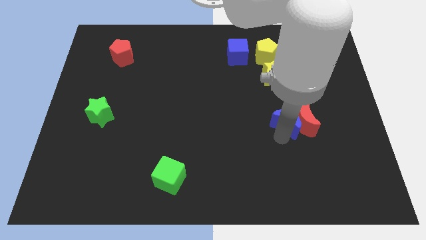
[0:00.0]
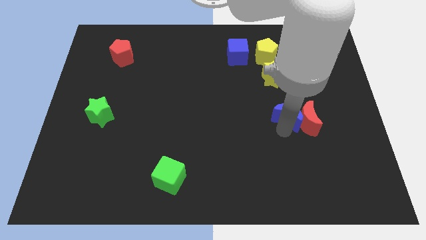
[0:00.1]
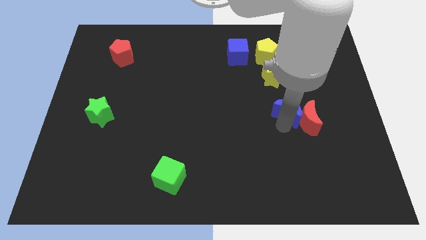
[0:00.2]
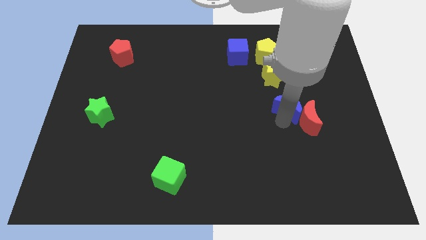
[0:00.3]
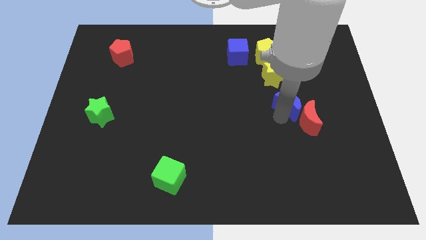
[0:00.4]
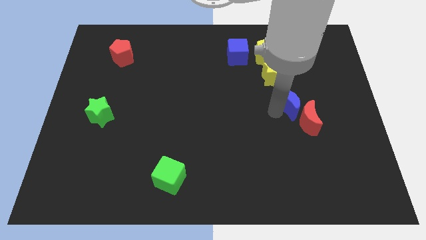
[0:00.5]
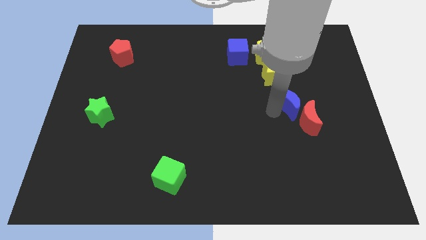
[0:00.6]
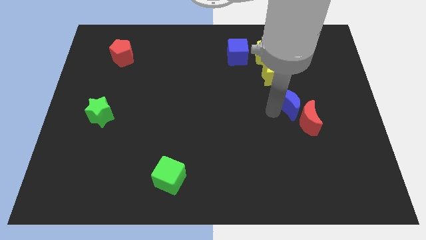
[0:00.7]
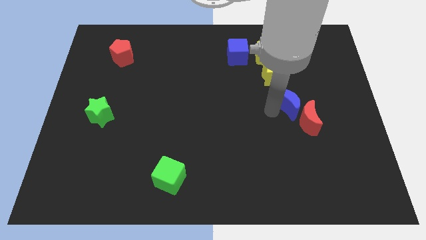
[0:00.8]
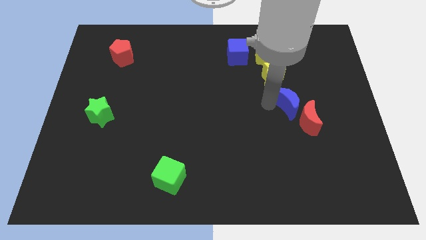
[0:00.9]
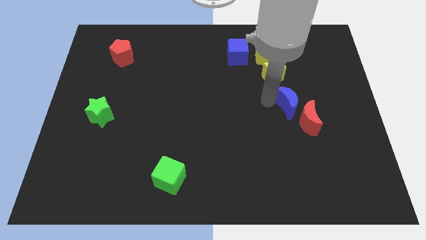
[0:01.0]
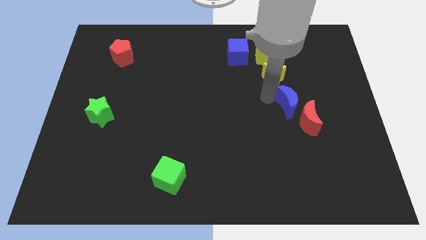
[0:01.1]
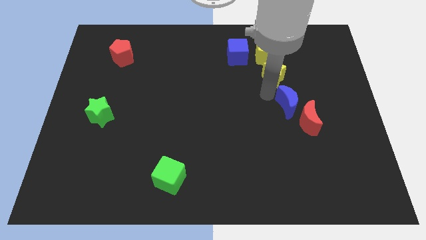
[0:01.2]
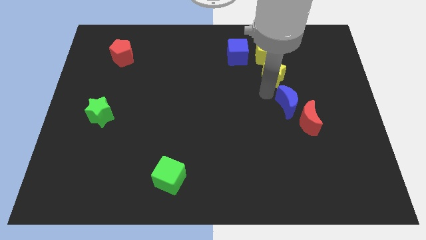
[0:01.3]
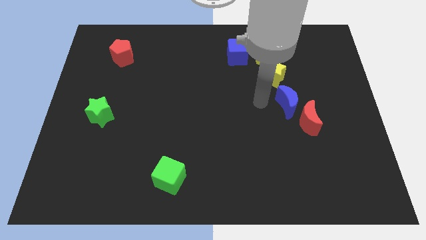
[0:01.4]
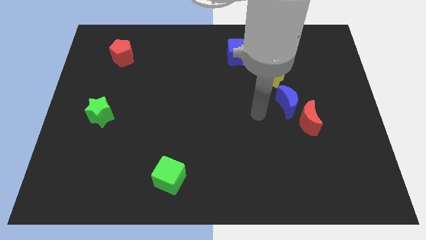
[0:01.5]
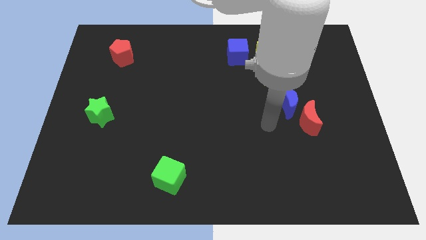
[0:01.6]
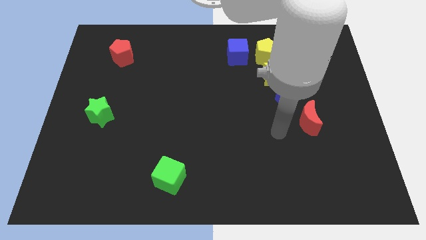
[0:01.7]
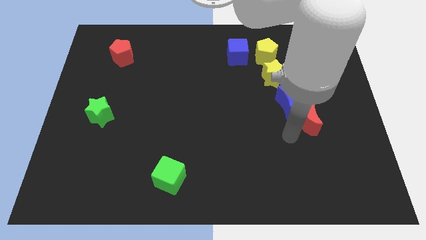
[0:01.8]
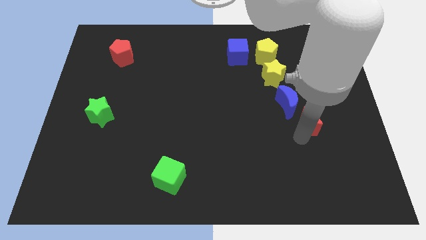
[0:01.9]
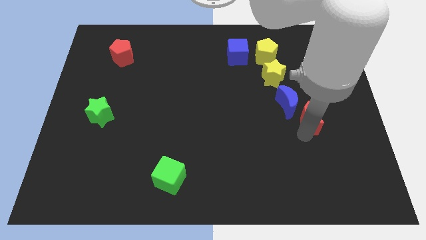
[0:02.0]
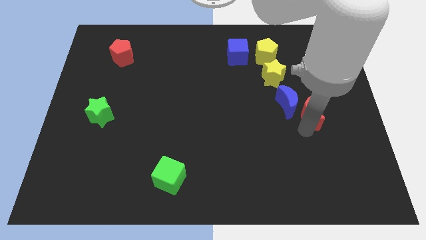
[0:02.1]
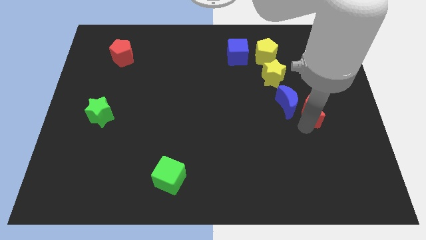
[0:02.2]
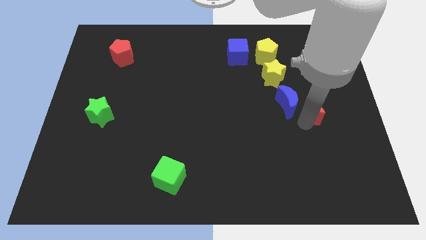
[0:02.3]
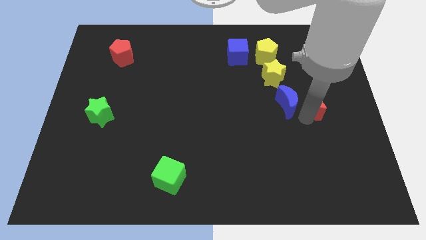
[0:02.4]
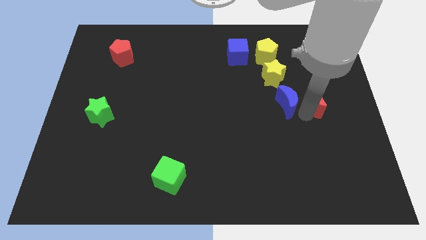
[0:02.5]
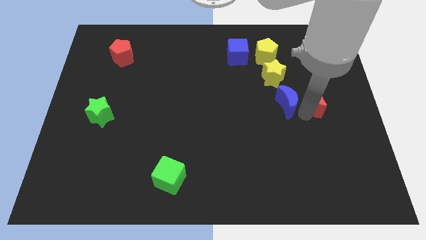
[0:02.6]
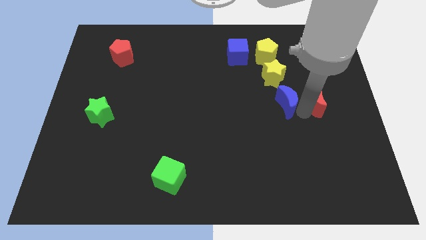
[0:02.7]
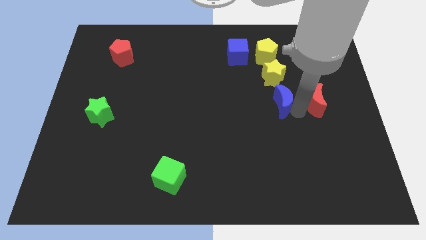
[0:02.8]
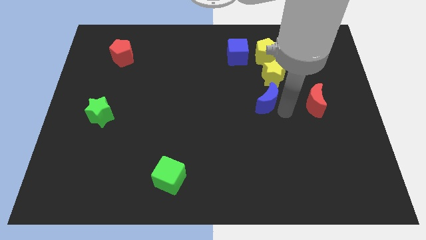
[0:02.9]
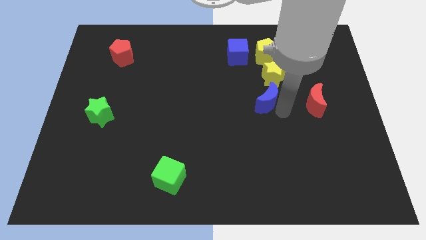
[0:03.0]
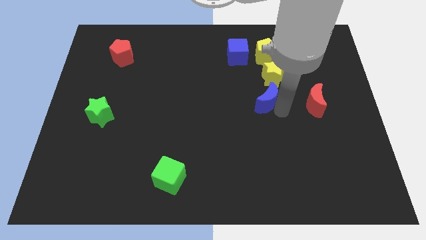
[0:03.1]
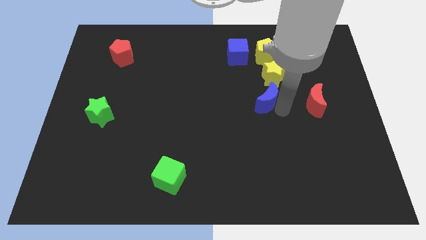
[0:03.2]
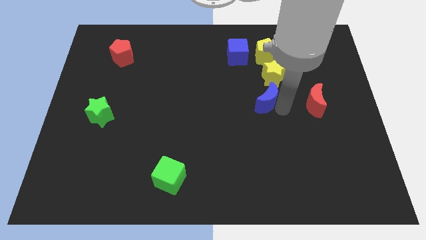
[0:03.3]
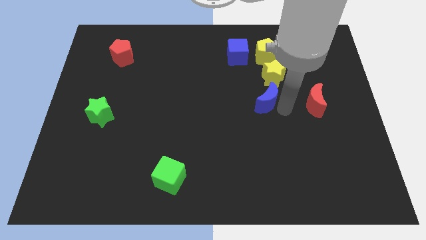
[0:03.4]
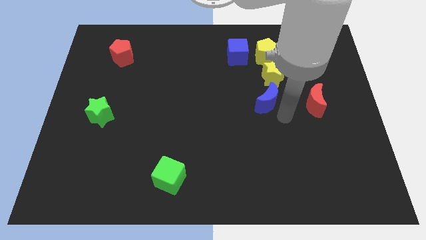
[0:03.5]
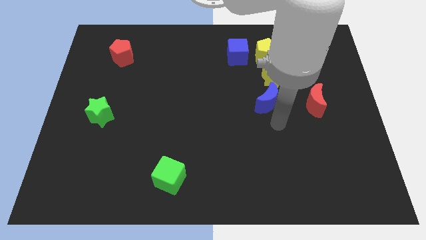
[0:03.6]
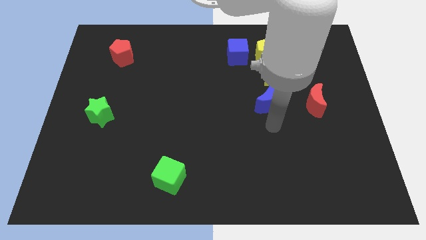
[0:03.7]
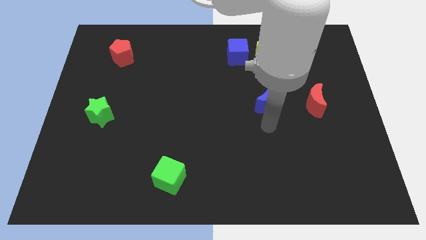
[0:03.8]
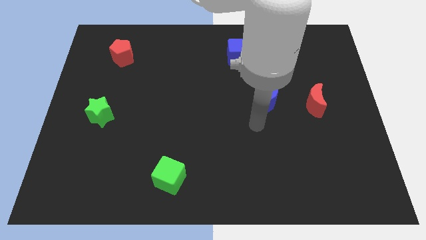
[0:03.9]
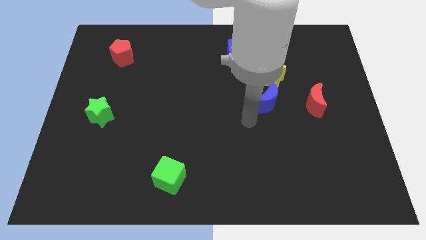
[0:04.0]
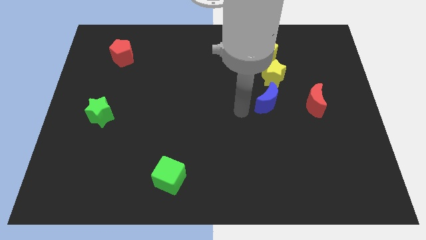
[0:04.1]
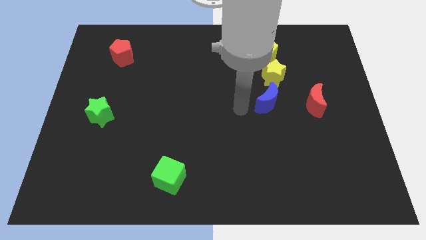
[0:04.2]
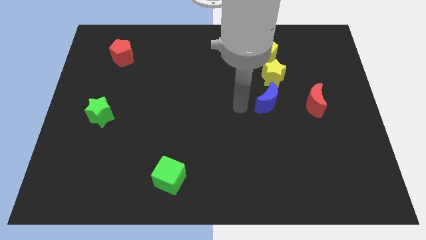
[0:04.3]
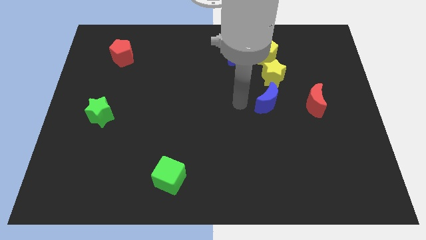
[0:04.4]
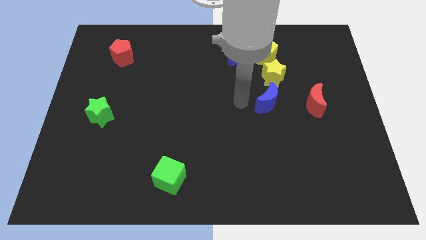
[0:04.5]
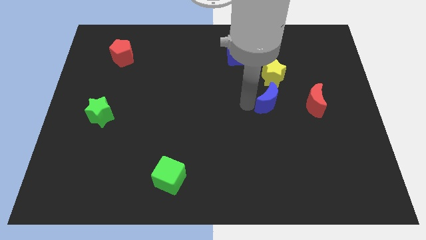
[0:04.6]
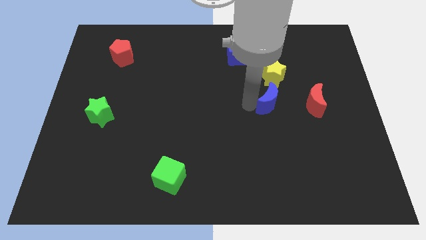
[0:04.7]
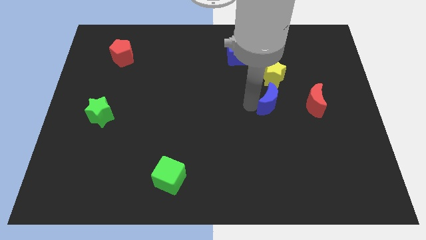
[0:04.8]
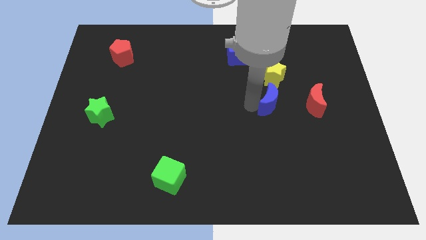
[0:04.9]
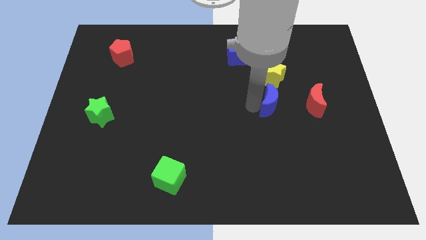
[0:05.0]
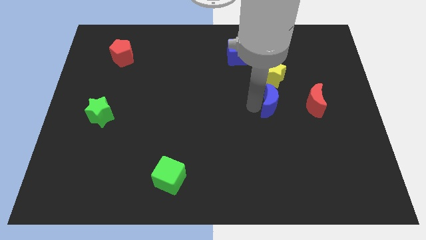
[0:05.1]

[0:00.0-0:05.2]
separate the blue moon from the red moon

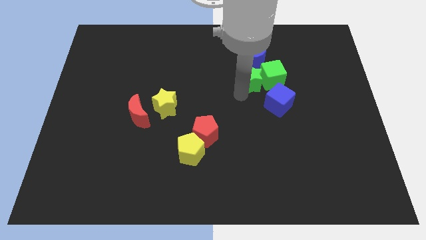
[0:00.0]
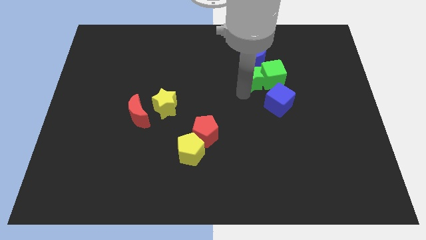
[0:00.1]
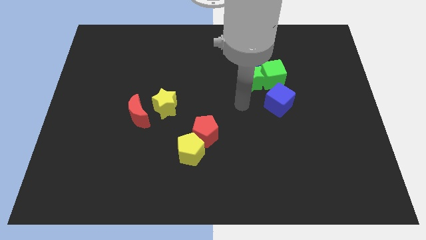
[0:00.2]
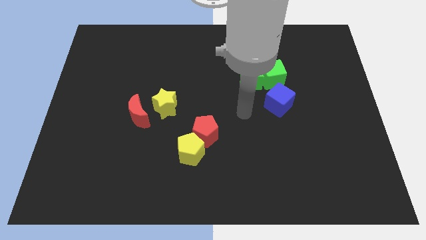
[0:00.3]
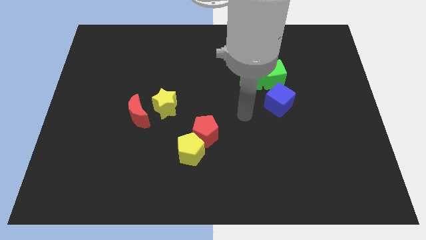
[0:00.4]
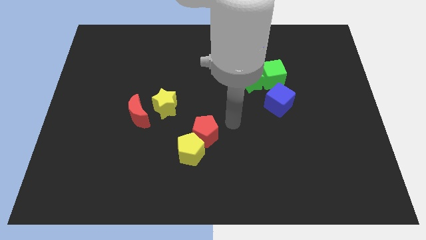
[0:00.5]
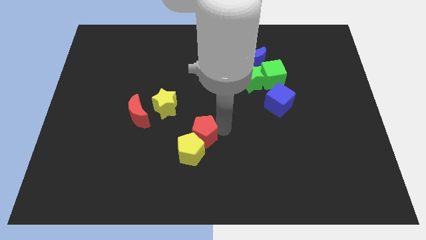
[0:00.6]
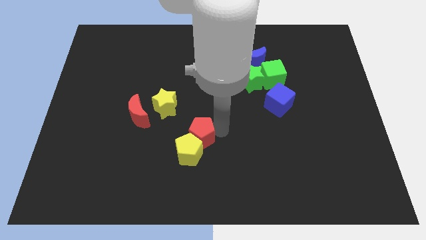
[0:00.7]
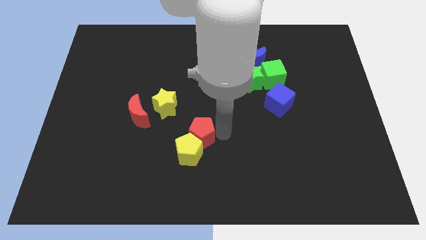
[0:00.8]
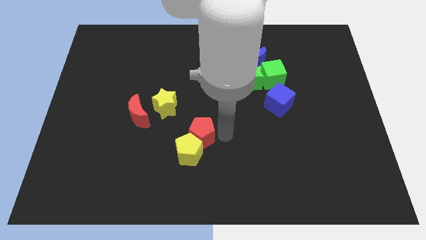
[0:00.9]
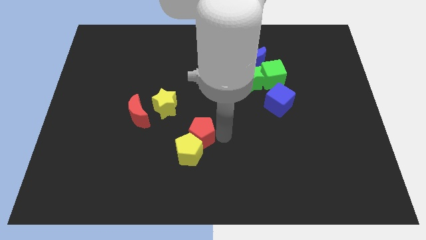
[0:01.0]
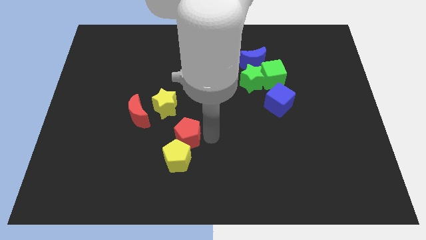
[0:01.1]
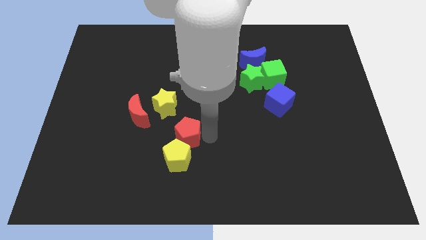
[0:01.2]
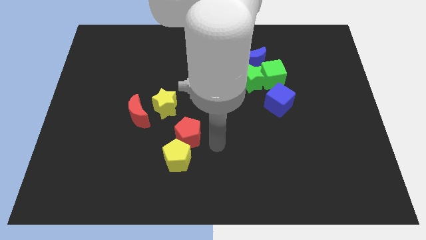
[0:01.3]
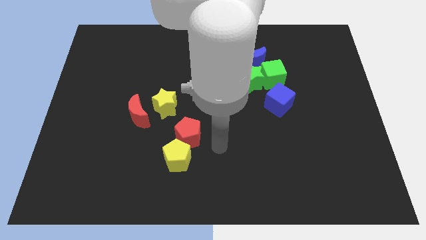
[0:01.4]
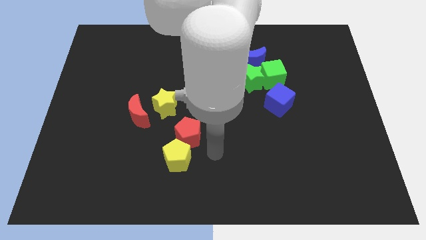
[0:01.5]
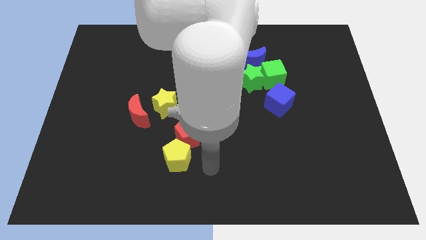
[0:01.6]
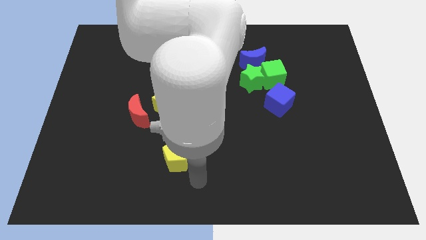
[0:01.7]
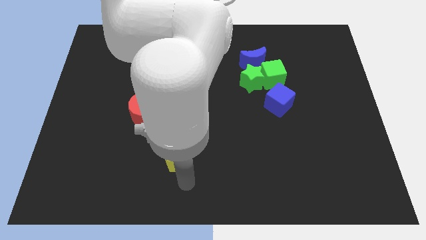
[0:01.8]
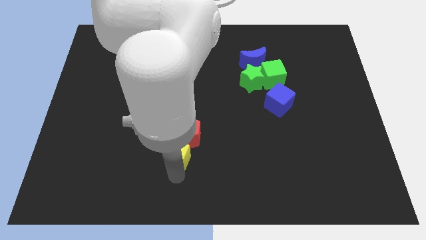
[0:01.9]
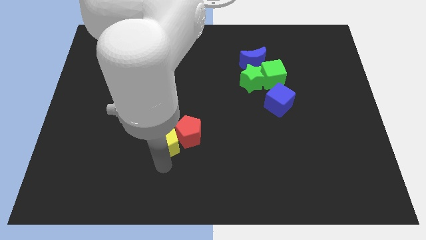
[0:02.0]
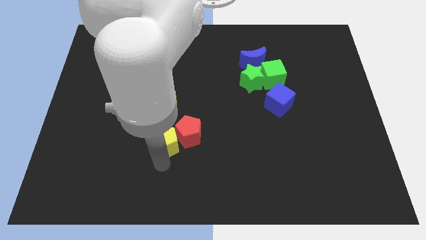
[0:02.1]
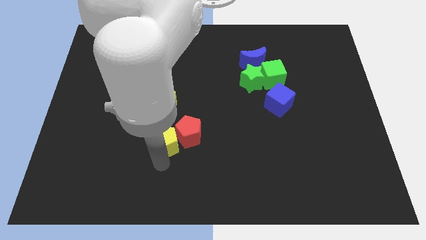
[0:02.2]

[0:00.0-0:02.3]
push red pentagon yellow pentagon to the center

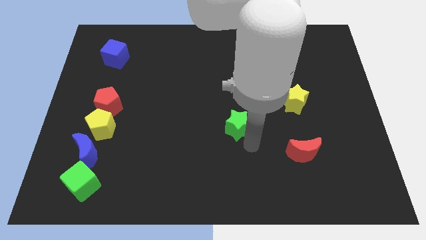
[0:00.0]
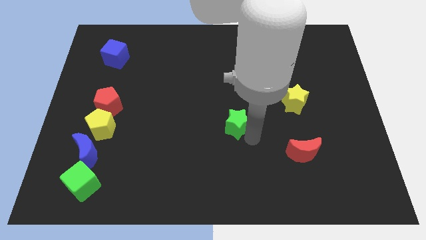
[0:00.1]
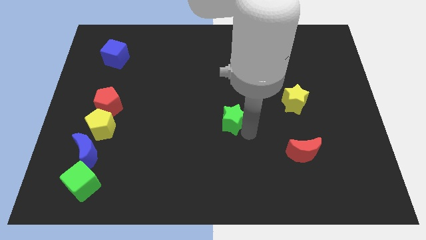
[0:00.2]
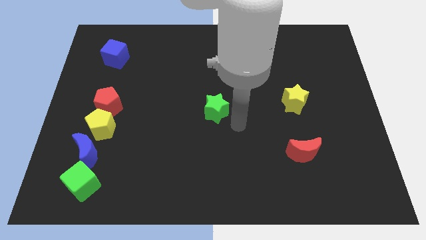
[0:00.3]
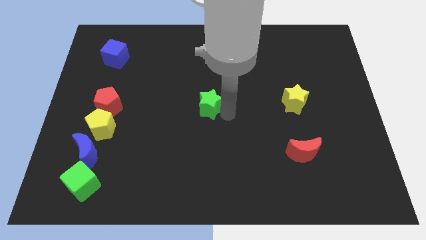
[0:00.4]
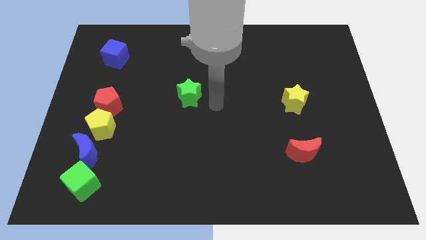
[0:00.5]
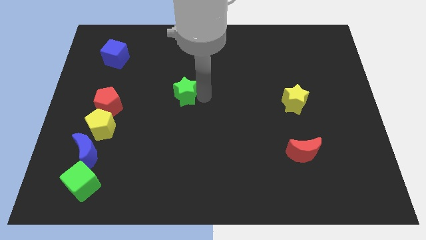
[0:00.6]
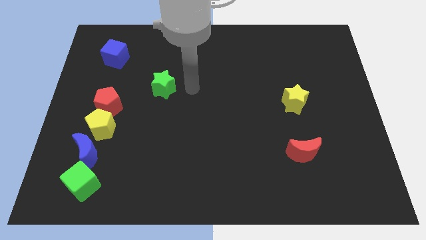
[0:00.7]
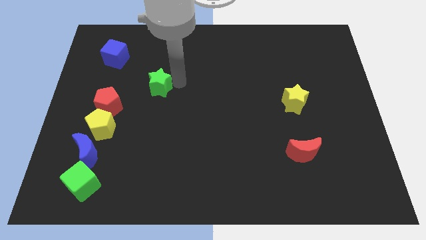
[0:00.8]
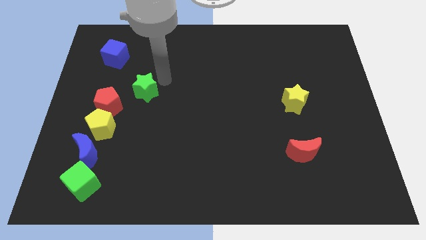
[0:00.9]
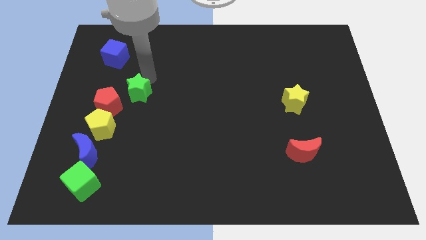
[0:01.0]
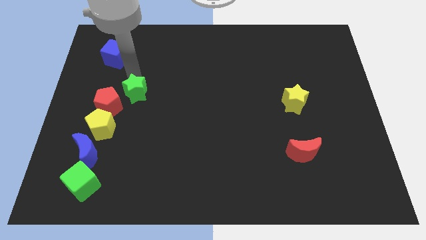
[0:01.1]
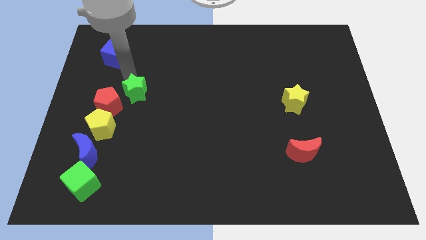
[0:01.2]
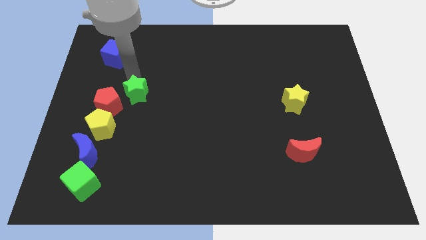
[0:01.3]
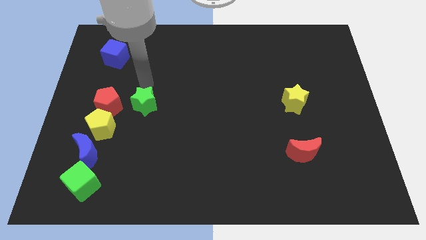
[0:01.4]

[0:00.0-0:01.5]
move the green star right to the red pentagon
